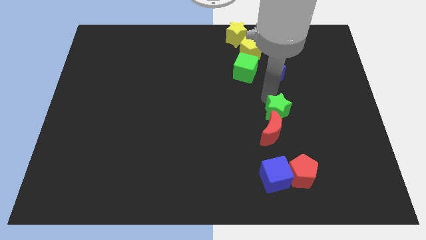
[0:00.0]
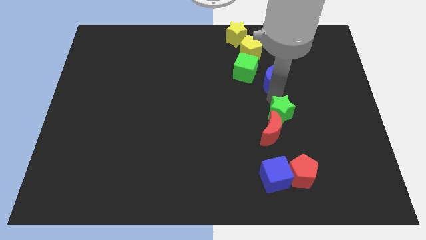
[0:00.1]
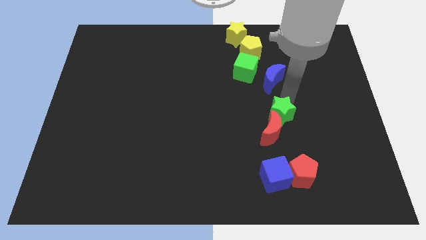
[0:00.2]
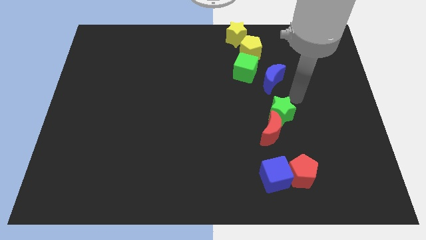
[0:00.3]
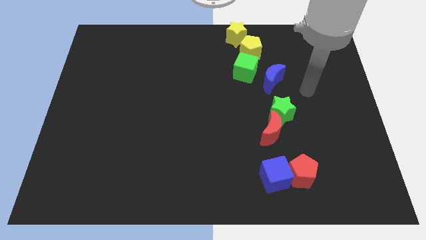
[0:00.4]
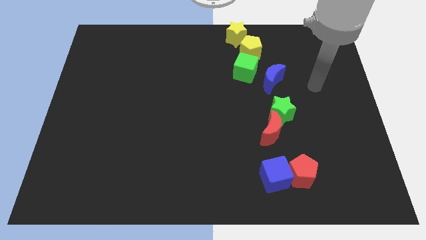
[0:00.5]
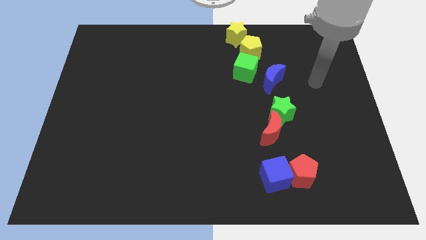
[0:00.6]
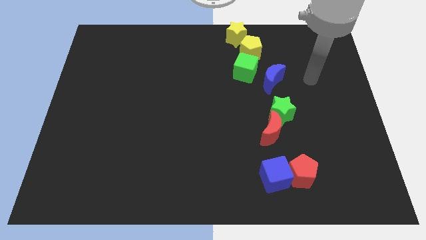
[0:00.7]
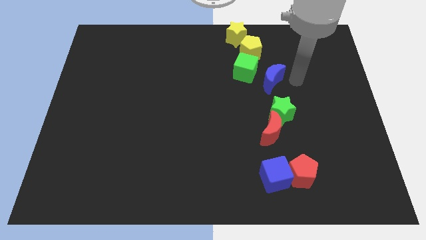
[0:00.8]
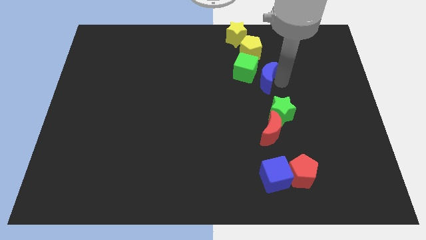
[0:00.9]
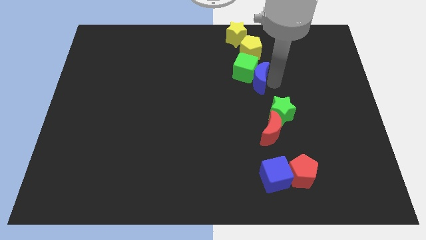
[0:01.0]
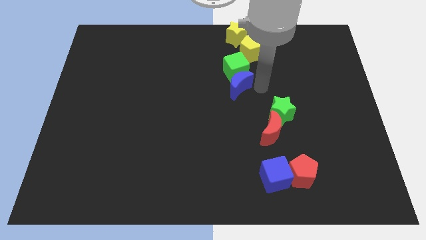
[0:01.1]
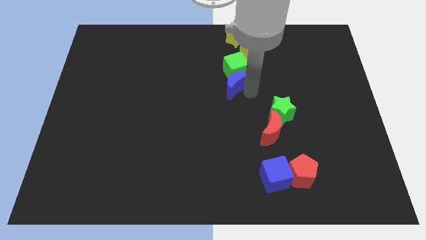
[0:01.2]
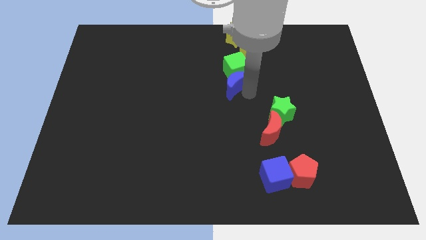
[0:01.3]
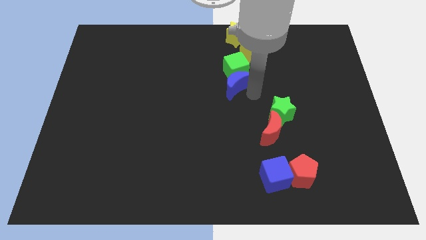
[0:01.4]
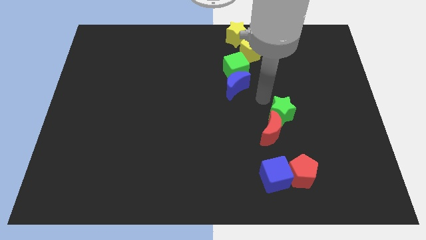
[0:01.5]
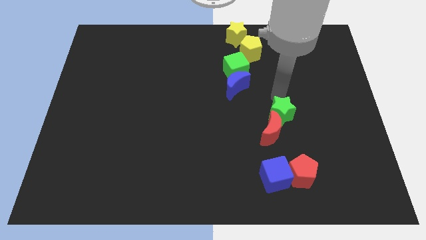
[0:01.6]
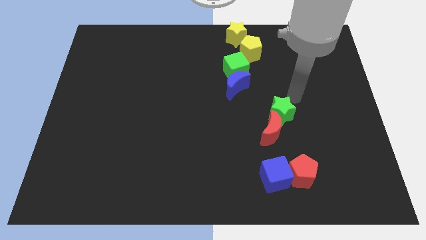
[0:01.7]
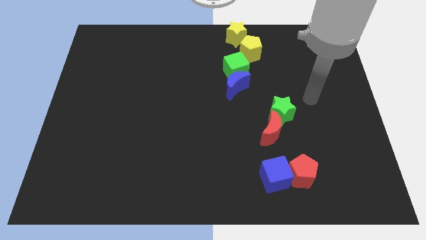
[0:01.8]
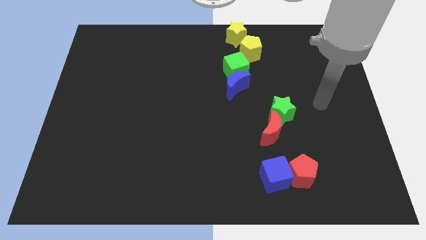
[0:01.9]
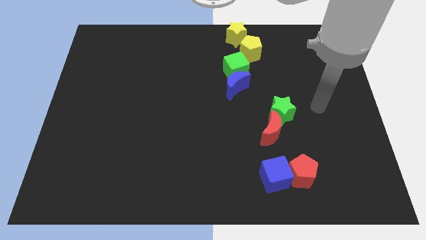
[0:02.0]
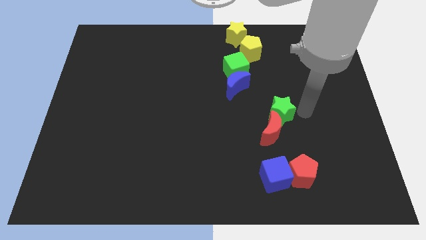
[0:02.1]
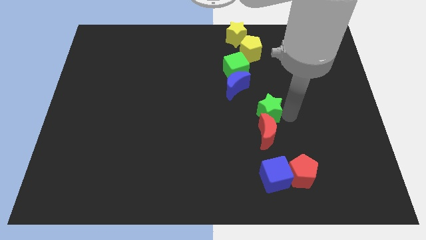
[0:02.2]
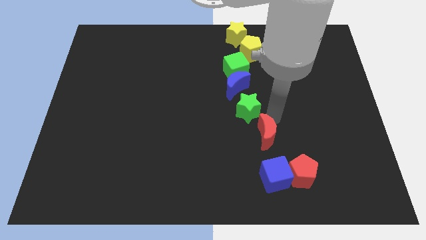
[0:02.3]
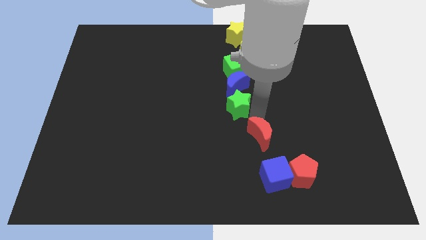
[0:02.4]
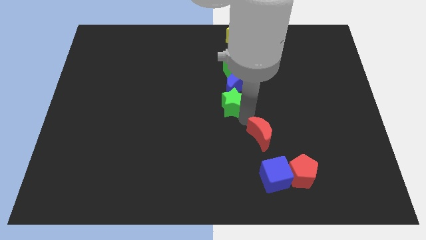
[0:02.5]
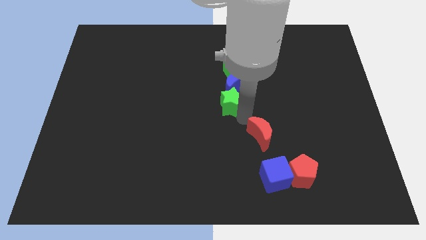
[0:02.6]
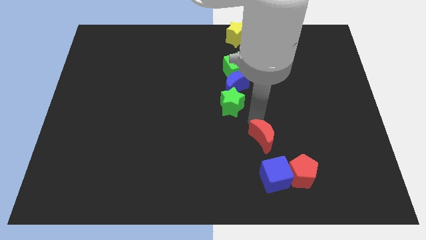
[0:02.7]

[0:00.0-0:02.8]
move green star below blue moon

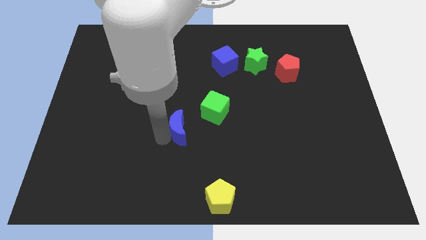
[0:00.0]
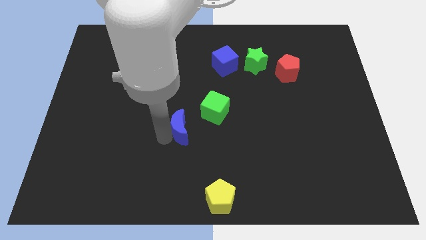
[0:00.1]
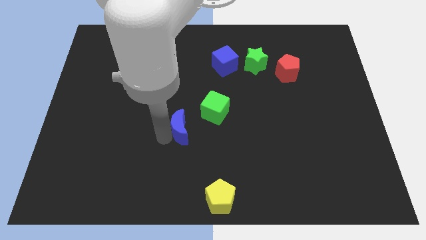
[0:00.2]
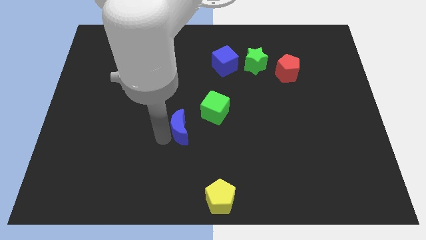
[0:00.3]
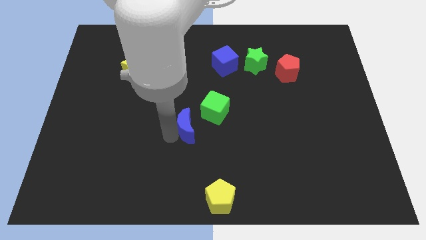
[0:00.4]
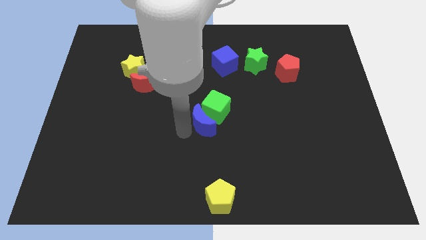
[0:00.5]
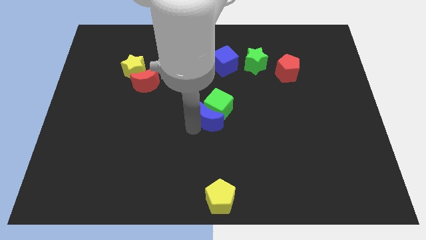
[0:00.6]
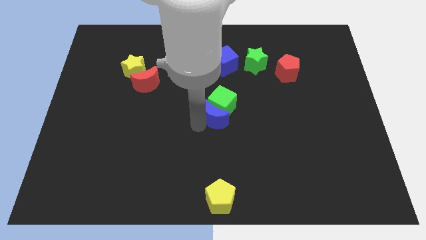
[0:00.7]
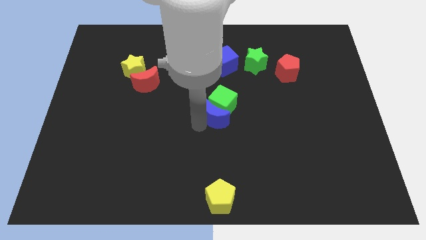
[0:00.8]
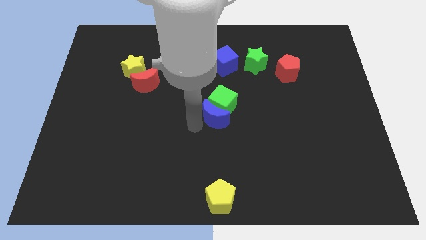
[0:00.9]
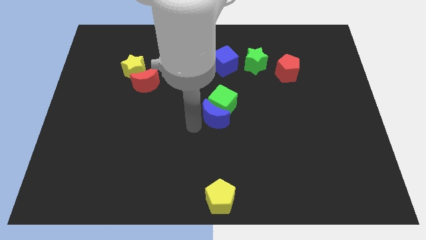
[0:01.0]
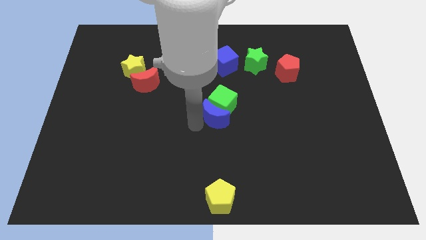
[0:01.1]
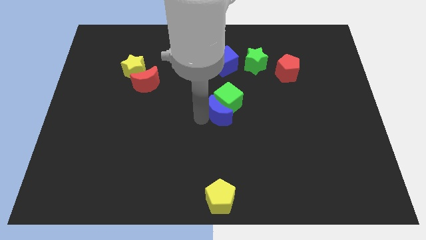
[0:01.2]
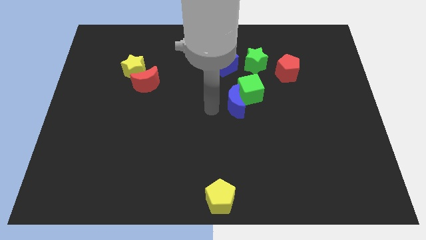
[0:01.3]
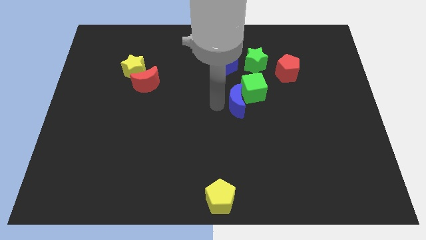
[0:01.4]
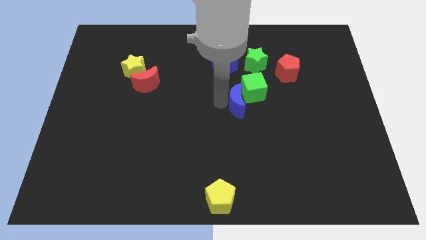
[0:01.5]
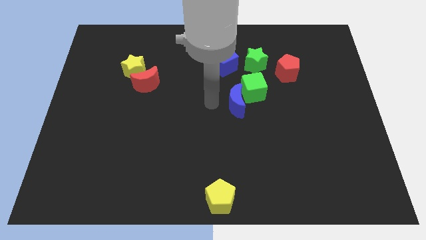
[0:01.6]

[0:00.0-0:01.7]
place blue moon into the green cube

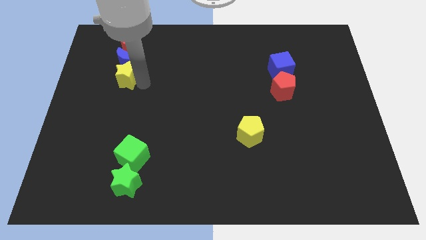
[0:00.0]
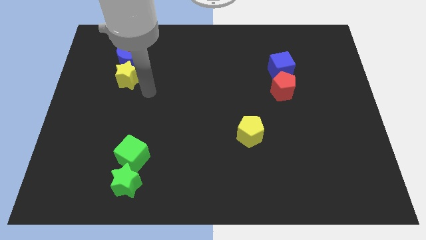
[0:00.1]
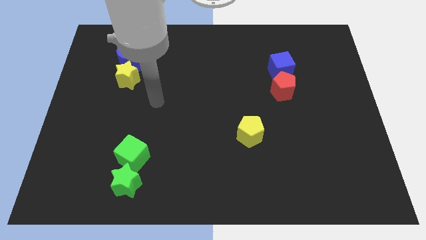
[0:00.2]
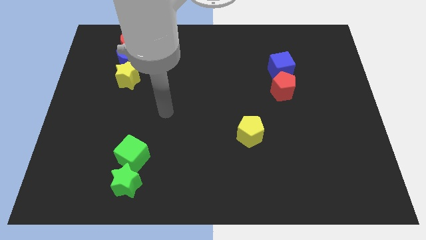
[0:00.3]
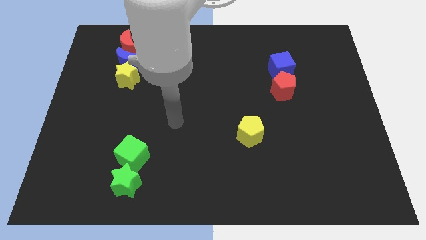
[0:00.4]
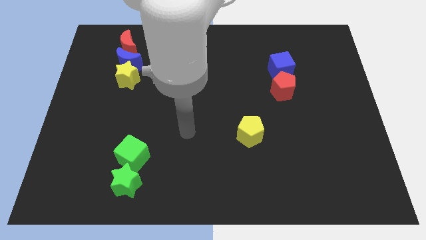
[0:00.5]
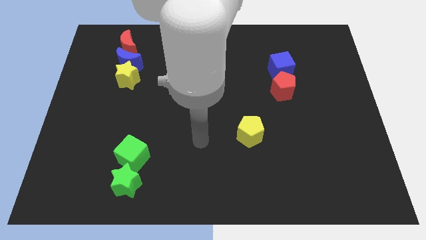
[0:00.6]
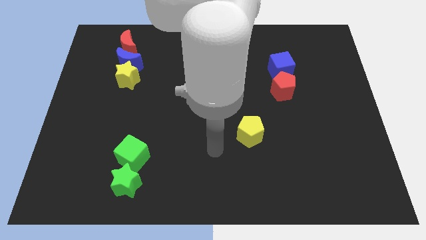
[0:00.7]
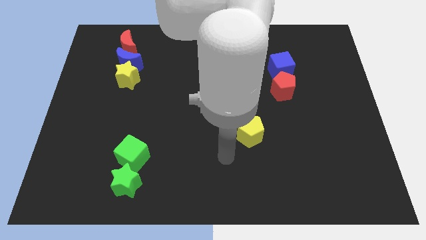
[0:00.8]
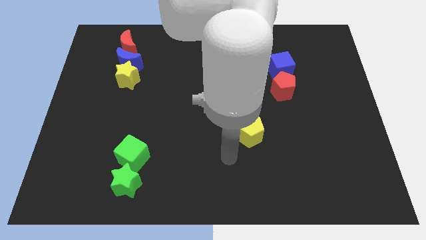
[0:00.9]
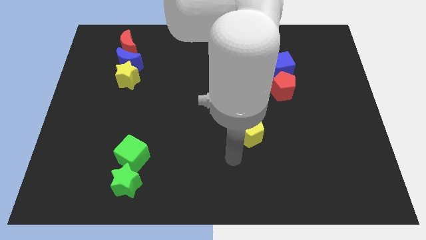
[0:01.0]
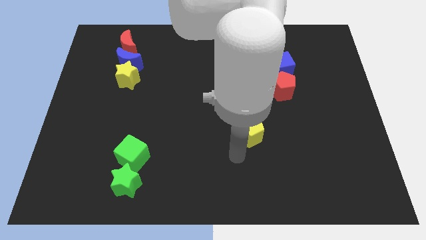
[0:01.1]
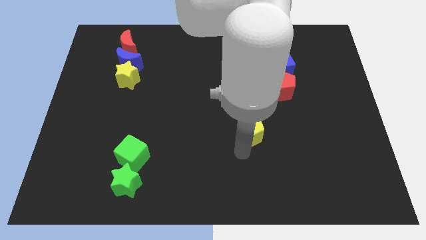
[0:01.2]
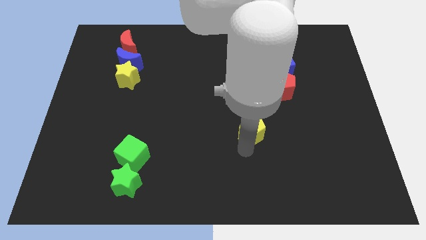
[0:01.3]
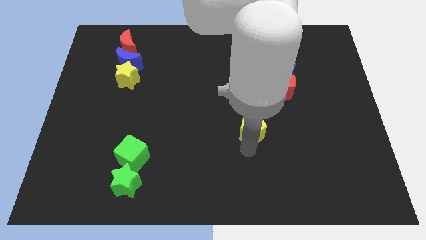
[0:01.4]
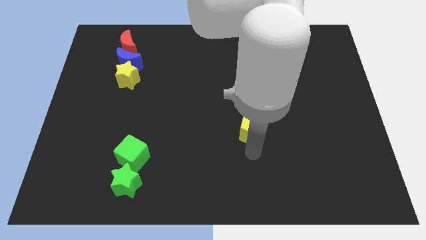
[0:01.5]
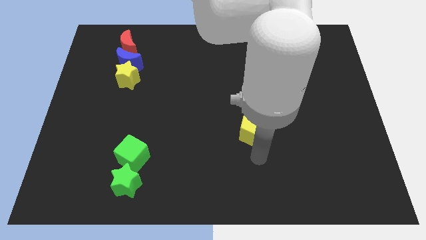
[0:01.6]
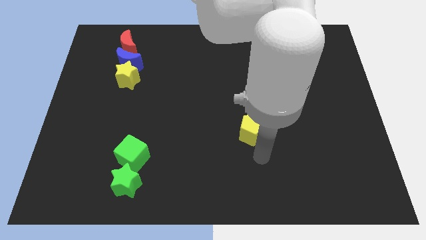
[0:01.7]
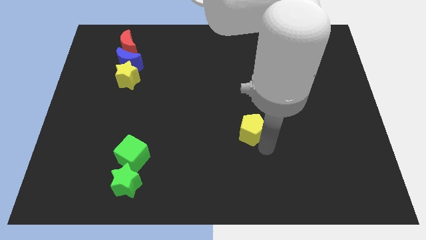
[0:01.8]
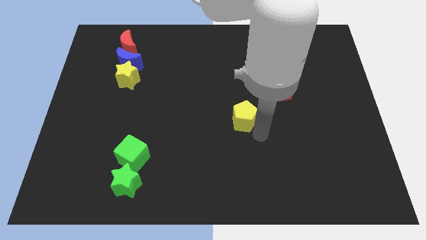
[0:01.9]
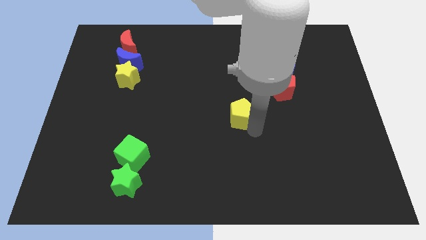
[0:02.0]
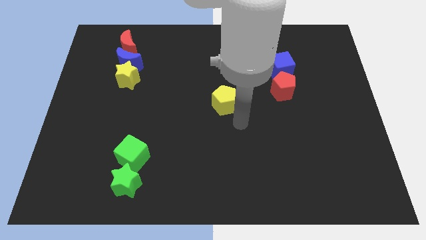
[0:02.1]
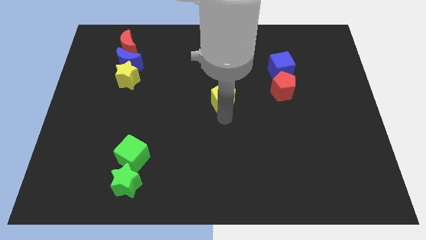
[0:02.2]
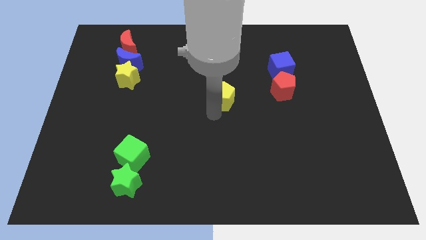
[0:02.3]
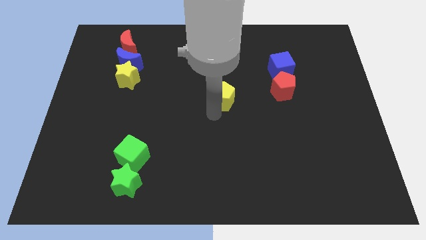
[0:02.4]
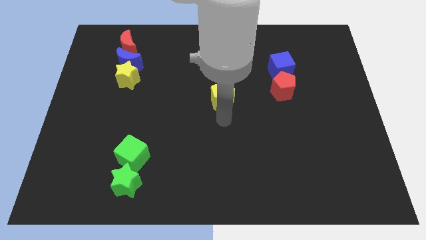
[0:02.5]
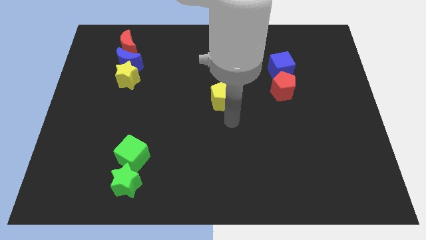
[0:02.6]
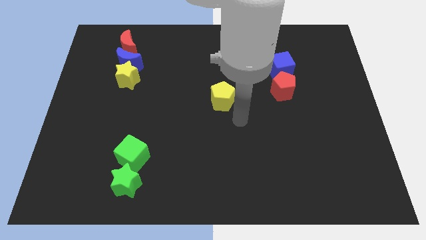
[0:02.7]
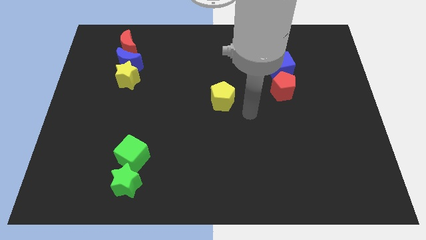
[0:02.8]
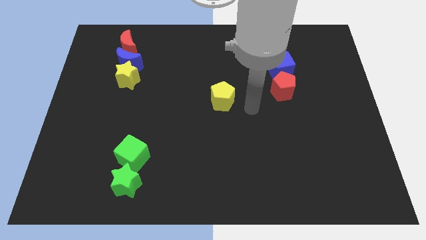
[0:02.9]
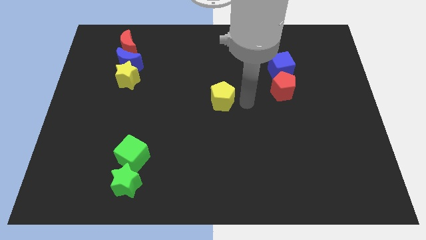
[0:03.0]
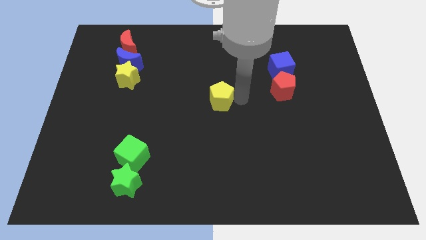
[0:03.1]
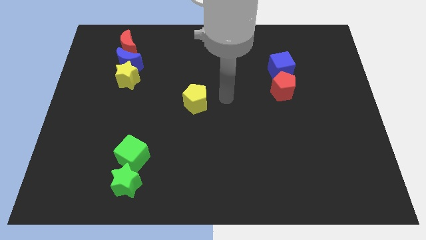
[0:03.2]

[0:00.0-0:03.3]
push the yellow pentagon to the center

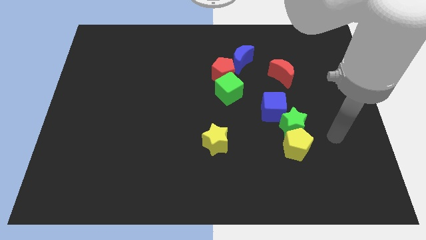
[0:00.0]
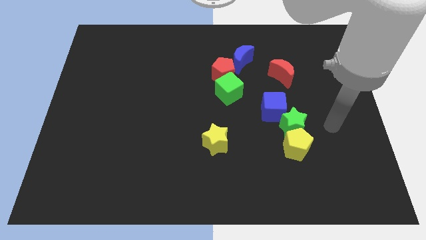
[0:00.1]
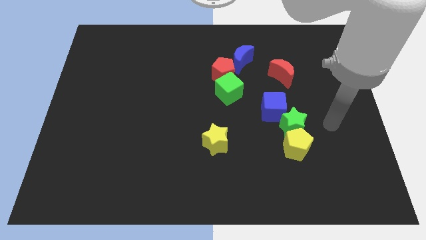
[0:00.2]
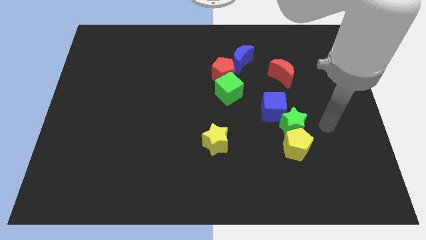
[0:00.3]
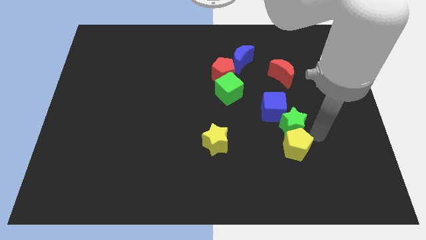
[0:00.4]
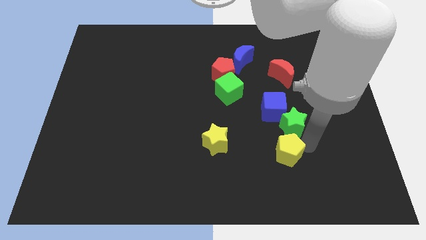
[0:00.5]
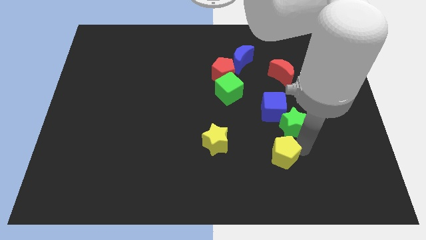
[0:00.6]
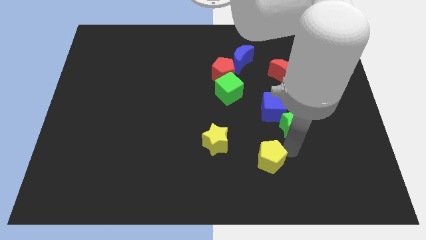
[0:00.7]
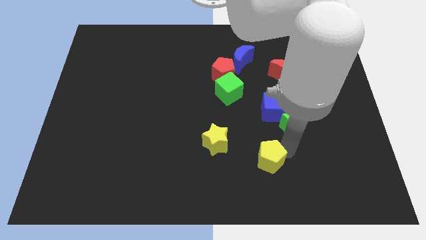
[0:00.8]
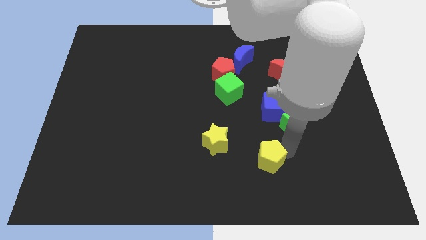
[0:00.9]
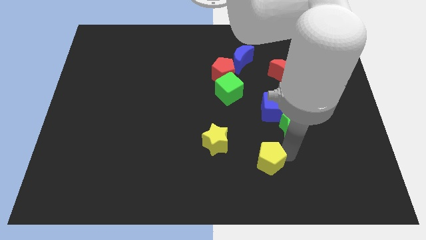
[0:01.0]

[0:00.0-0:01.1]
move the yellow pentagon away from the green star
